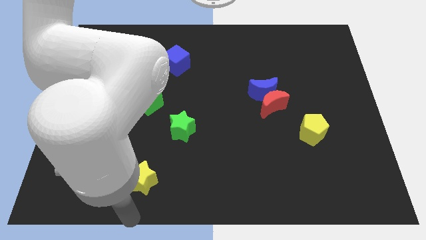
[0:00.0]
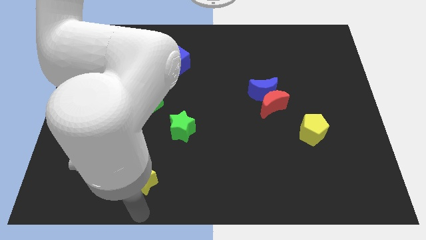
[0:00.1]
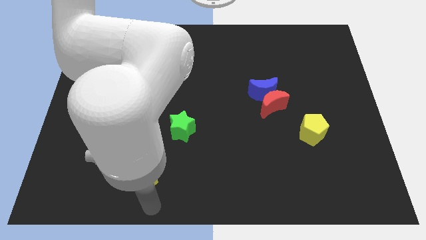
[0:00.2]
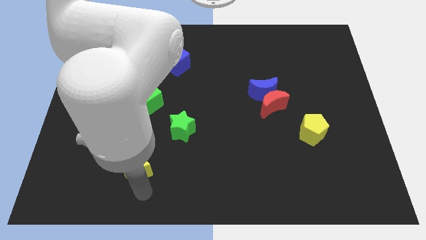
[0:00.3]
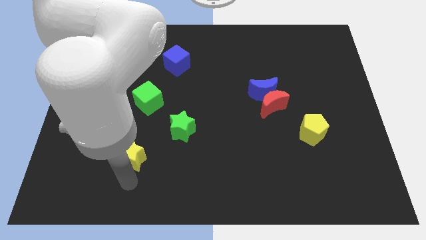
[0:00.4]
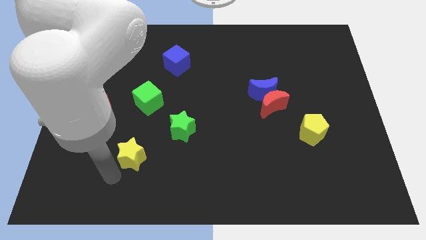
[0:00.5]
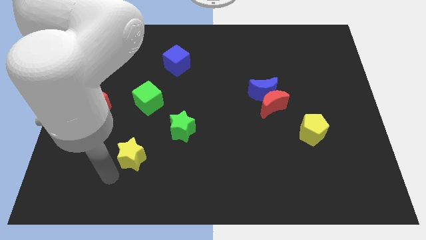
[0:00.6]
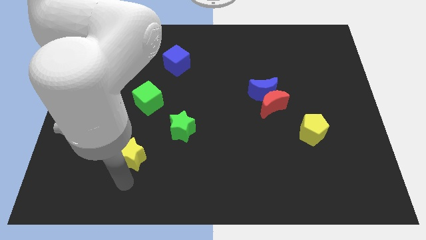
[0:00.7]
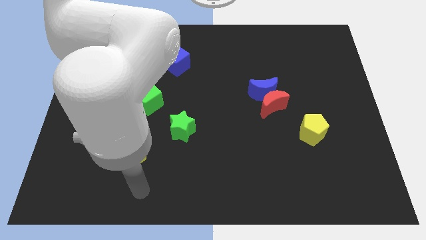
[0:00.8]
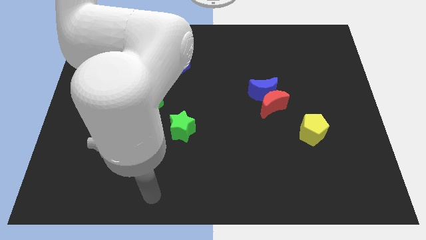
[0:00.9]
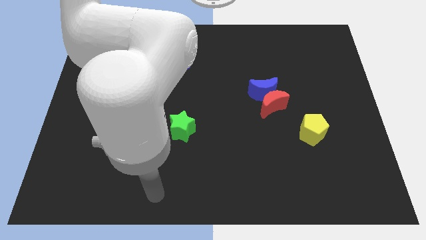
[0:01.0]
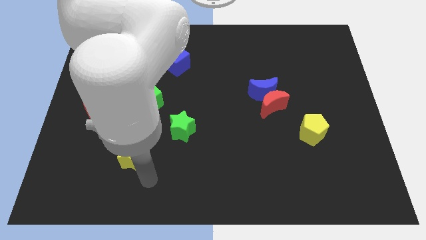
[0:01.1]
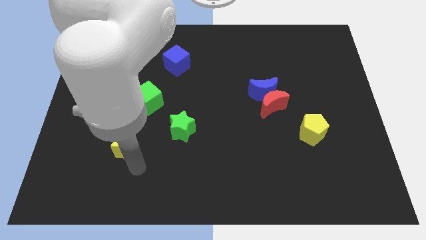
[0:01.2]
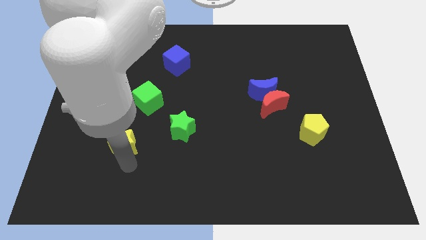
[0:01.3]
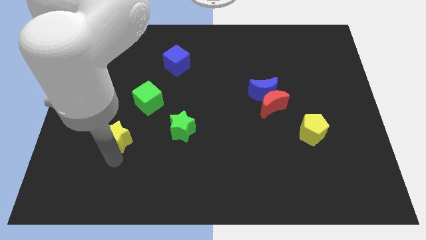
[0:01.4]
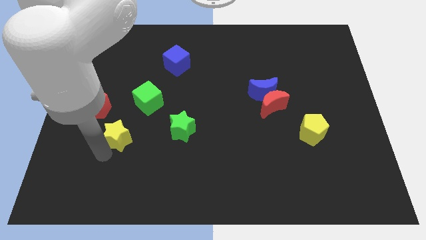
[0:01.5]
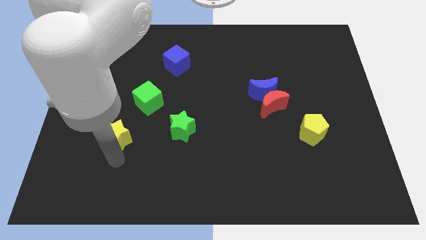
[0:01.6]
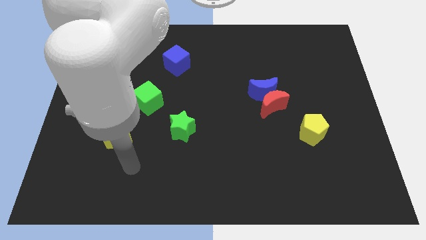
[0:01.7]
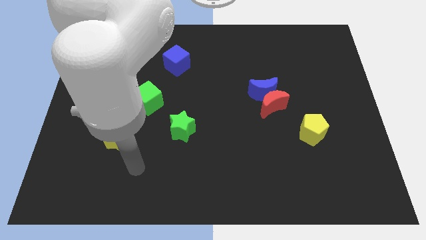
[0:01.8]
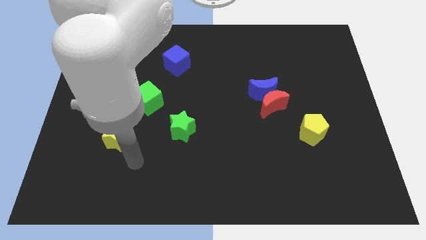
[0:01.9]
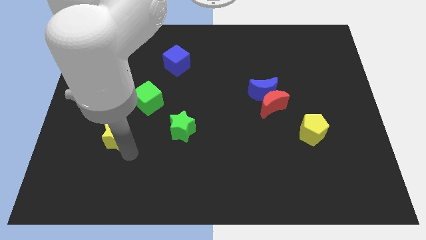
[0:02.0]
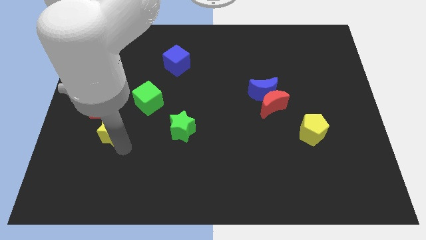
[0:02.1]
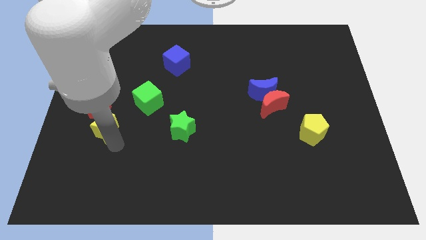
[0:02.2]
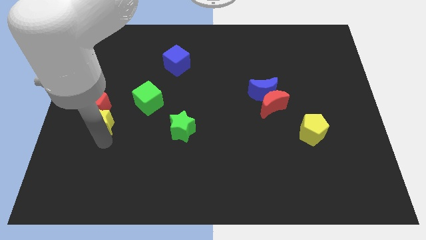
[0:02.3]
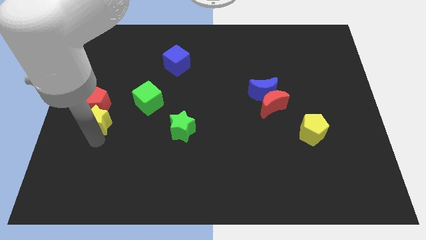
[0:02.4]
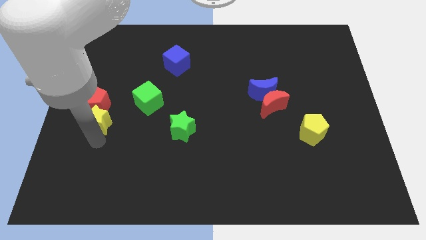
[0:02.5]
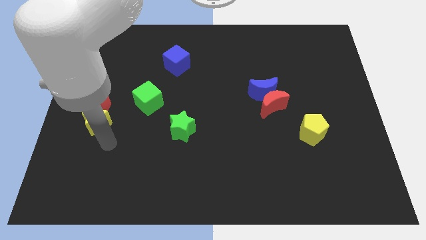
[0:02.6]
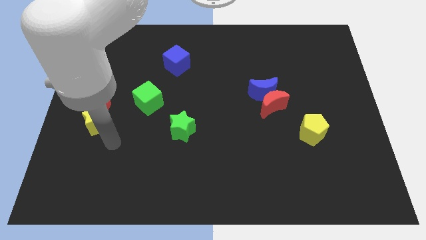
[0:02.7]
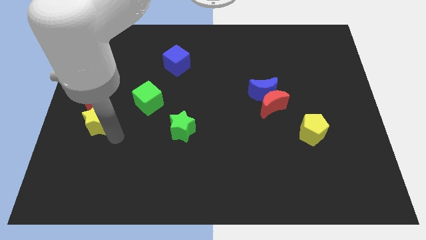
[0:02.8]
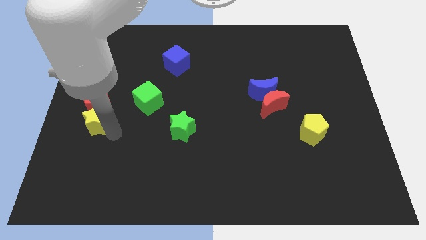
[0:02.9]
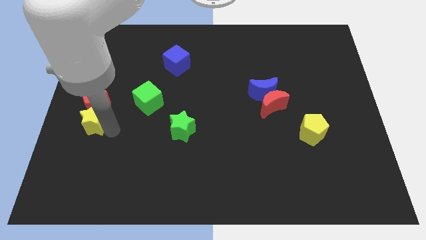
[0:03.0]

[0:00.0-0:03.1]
push yellow star towards left center

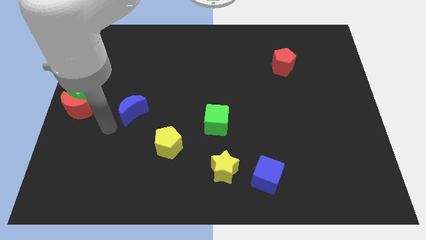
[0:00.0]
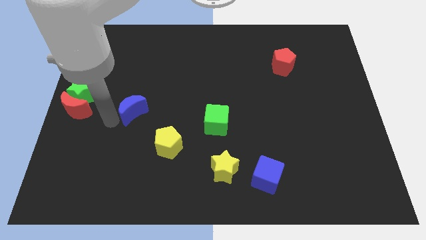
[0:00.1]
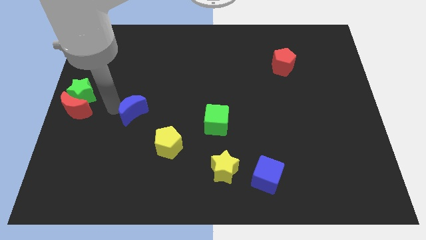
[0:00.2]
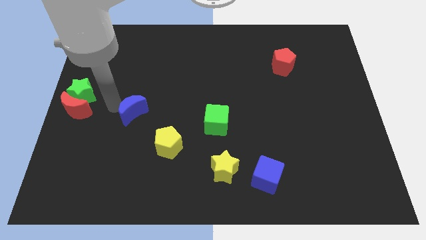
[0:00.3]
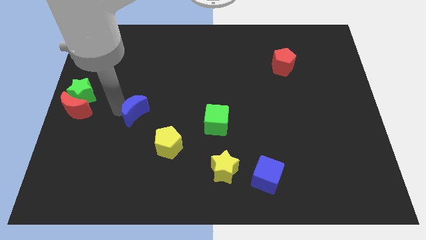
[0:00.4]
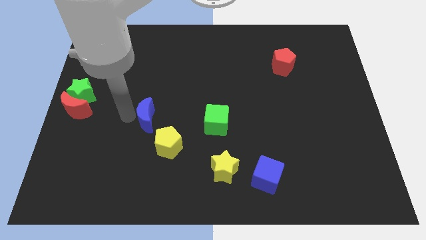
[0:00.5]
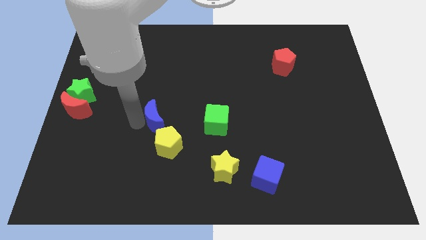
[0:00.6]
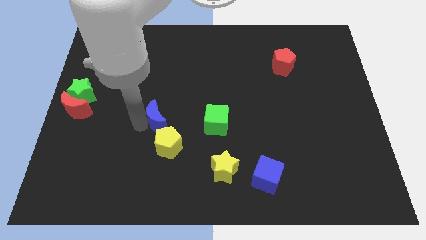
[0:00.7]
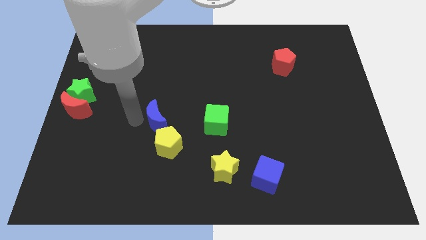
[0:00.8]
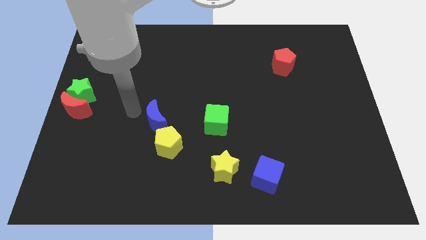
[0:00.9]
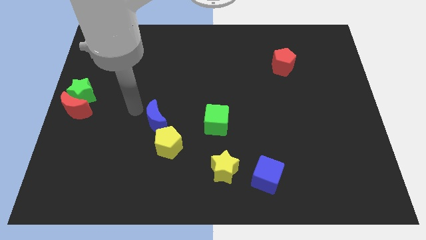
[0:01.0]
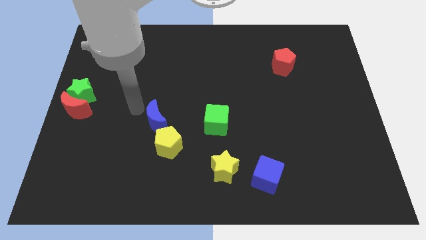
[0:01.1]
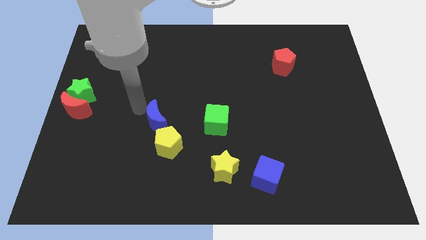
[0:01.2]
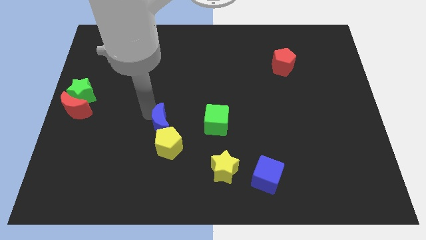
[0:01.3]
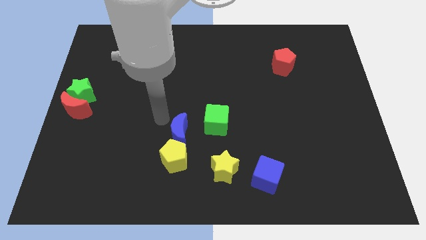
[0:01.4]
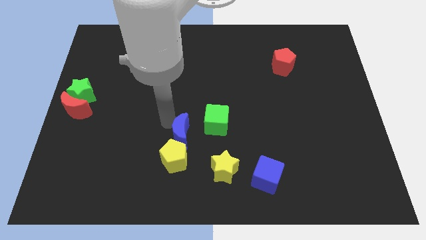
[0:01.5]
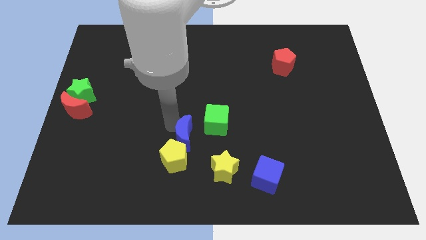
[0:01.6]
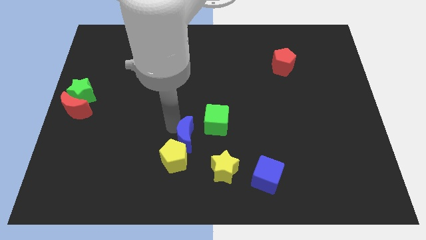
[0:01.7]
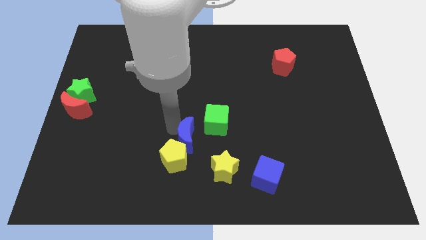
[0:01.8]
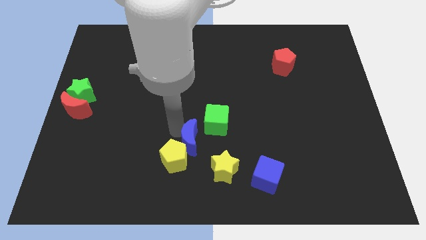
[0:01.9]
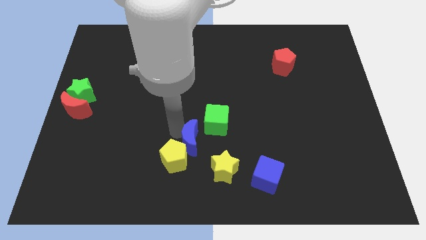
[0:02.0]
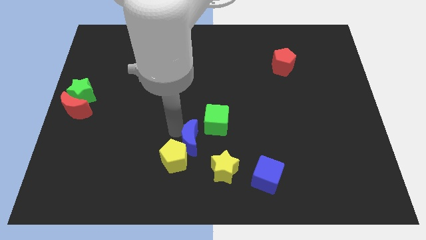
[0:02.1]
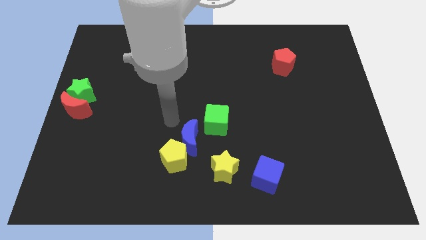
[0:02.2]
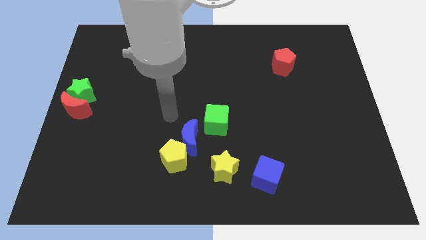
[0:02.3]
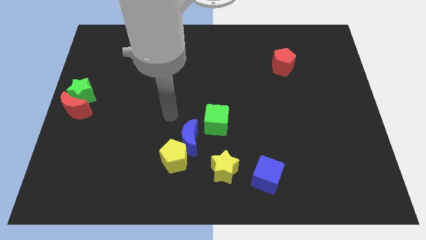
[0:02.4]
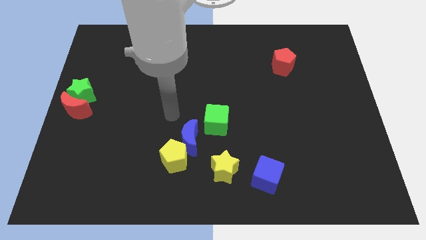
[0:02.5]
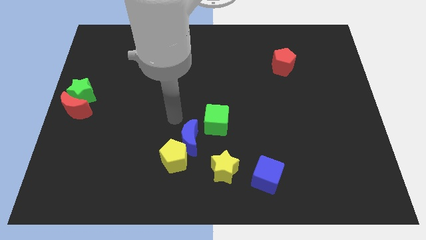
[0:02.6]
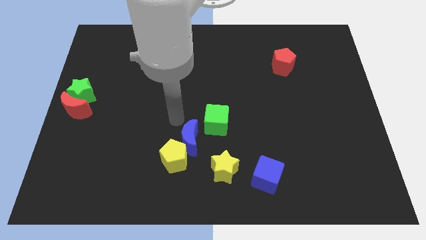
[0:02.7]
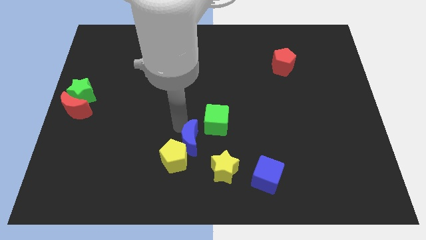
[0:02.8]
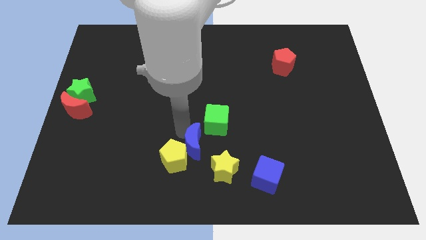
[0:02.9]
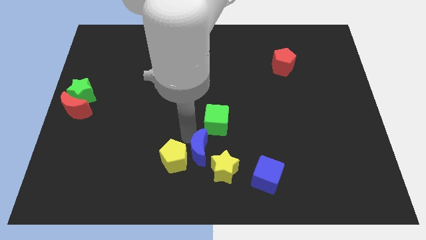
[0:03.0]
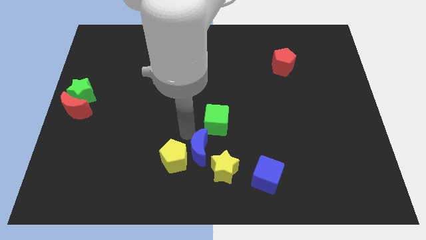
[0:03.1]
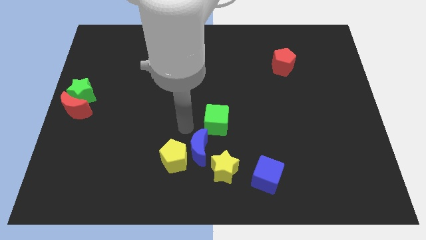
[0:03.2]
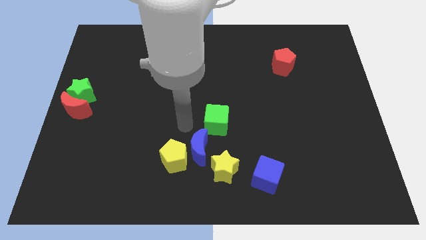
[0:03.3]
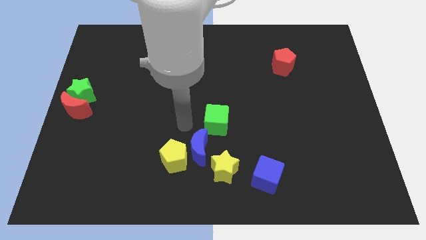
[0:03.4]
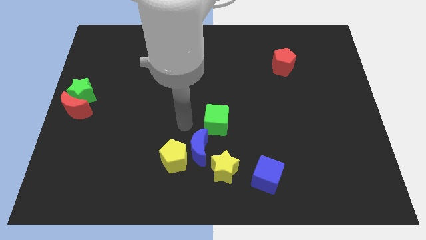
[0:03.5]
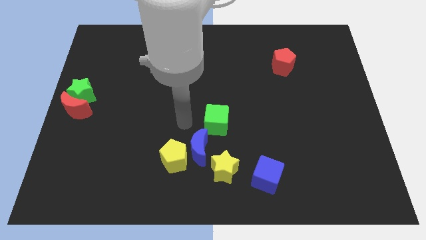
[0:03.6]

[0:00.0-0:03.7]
move the blue crescent in between green cube and yellow star

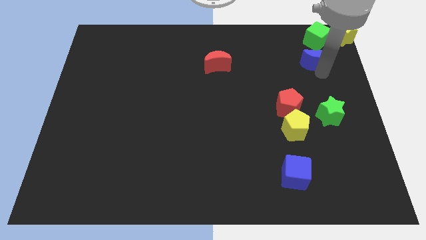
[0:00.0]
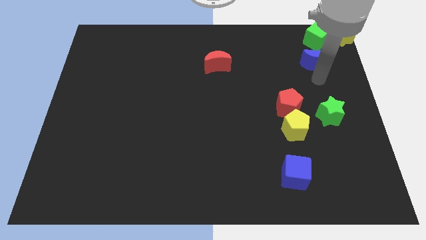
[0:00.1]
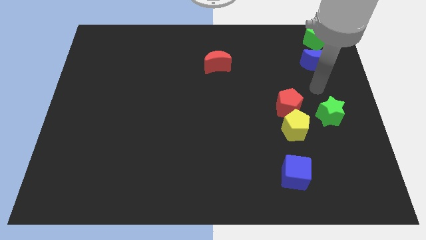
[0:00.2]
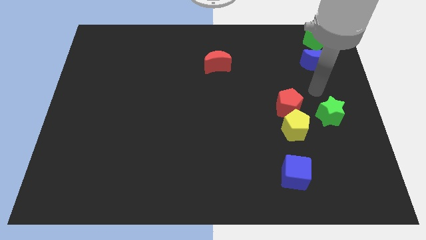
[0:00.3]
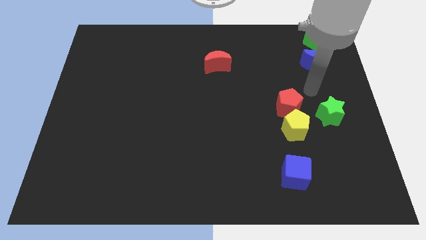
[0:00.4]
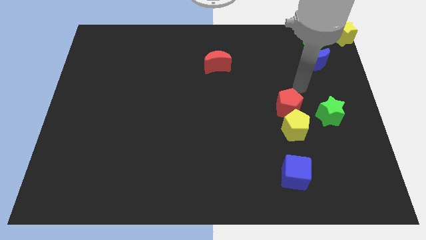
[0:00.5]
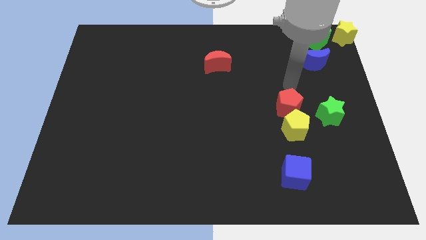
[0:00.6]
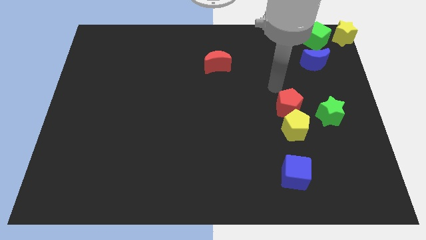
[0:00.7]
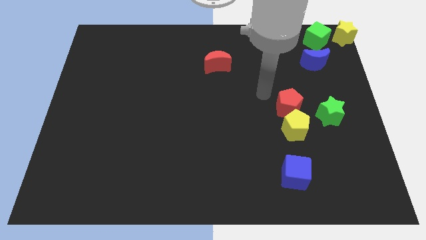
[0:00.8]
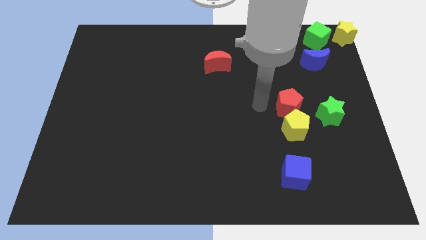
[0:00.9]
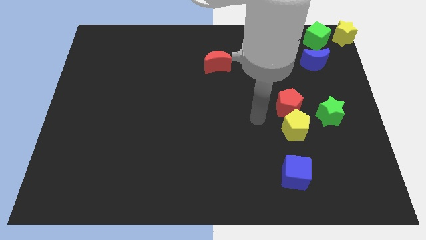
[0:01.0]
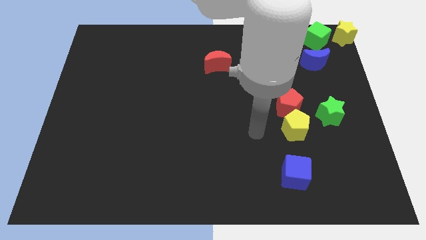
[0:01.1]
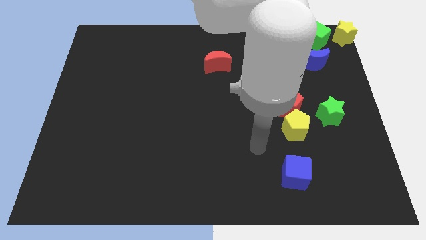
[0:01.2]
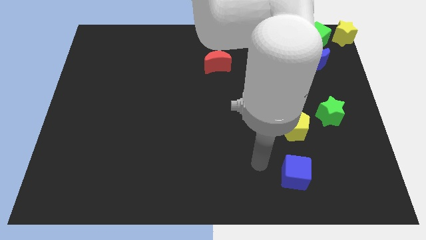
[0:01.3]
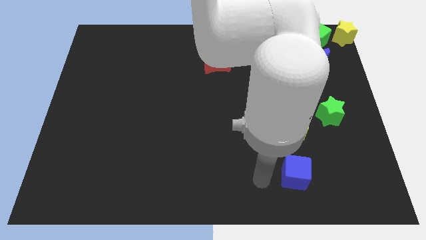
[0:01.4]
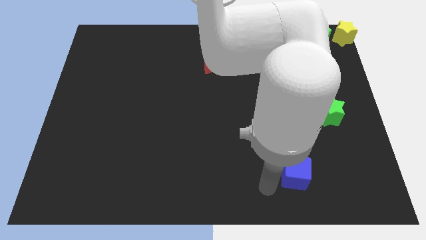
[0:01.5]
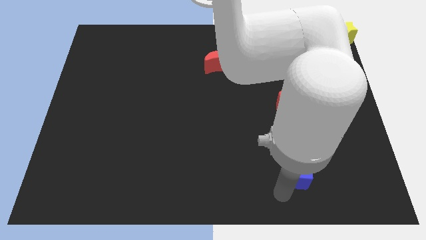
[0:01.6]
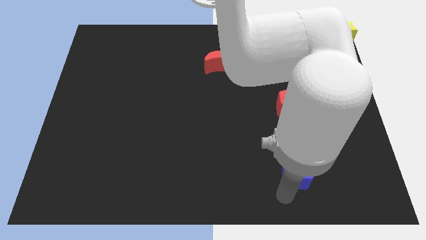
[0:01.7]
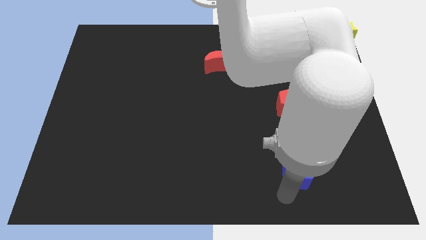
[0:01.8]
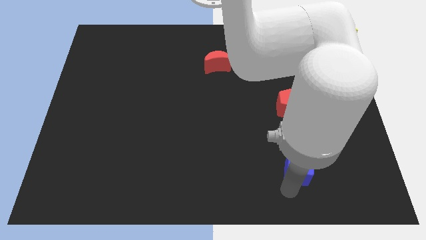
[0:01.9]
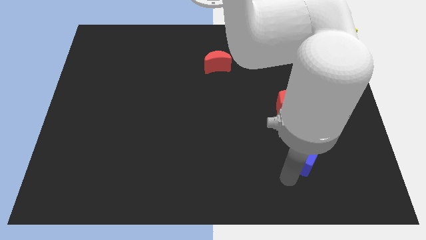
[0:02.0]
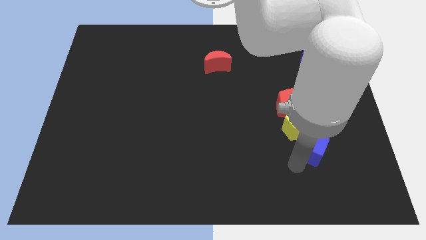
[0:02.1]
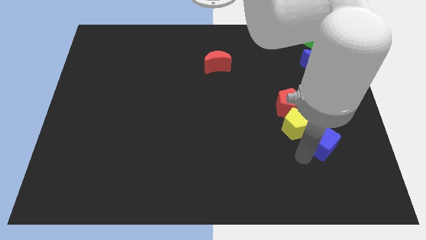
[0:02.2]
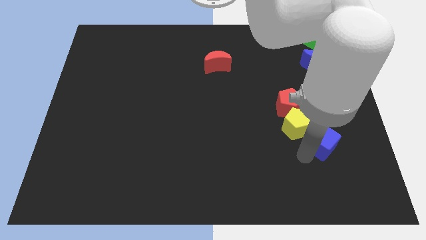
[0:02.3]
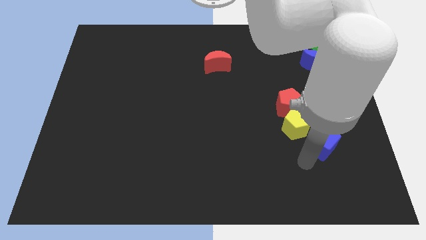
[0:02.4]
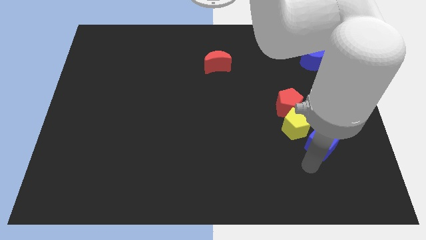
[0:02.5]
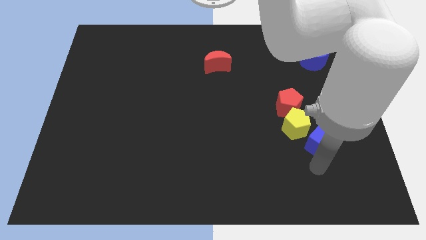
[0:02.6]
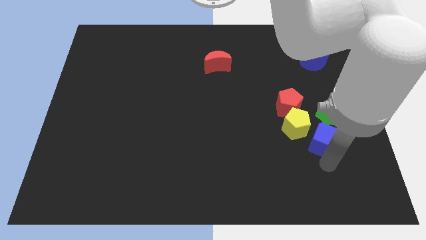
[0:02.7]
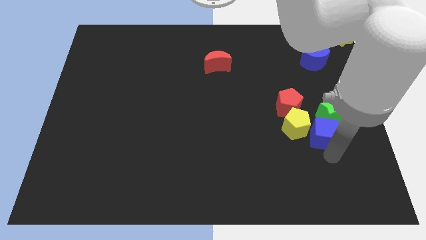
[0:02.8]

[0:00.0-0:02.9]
move the blue cube towards the green star
